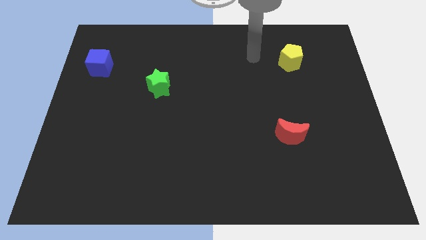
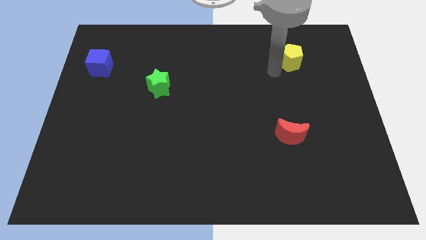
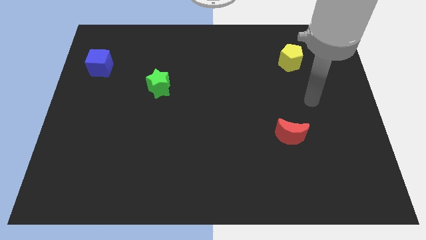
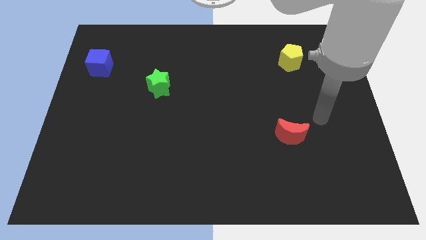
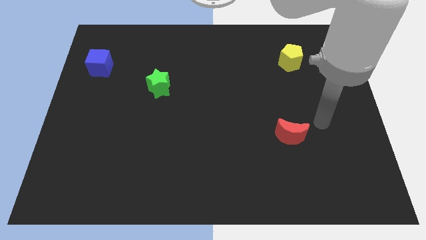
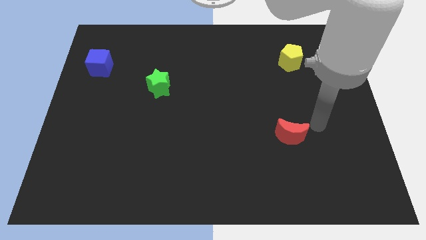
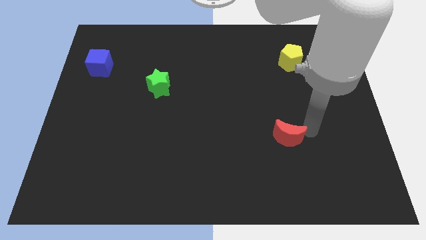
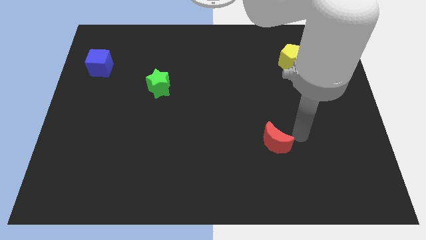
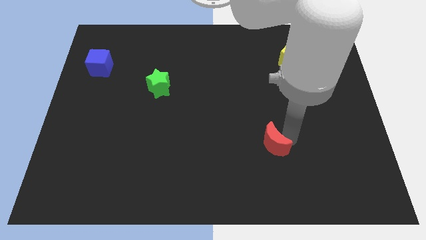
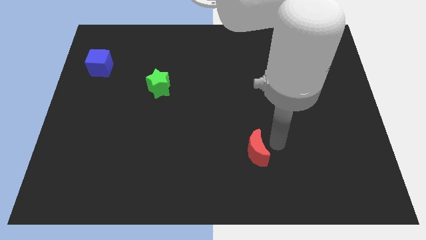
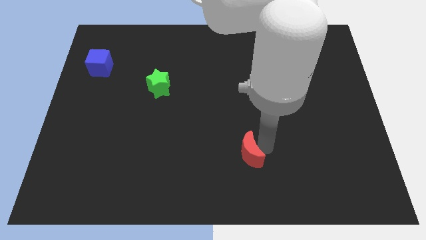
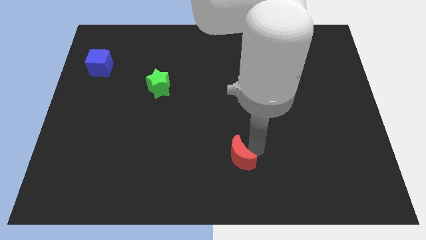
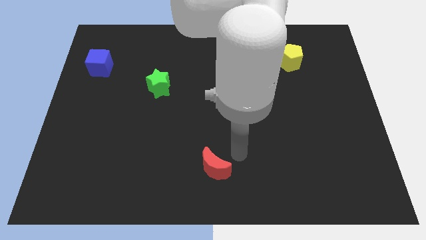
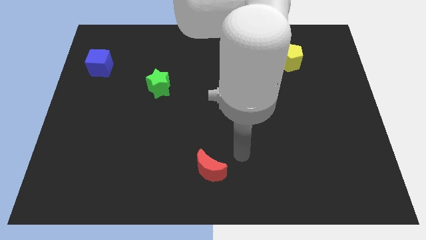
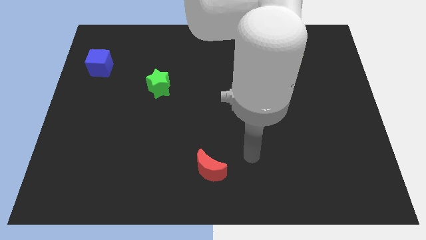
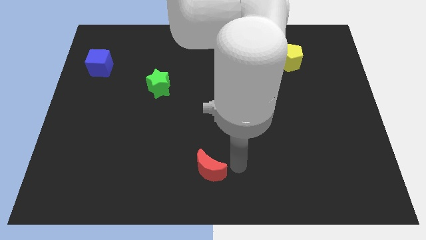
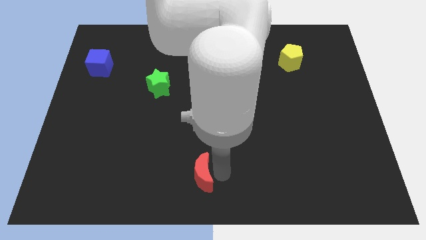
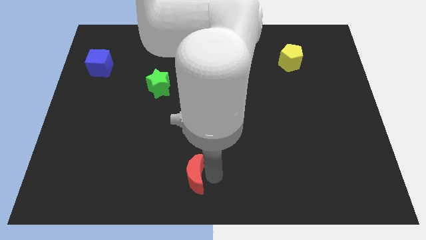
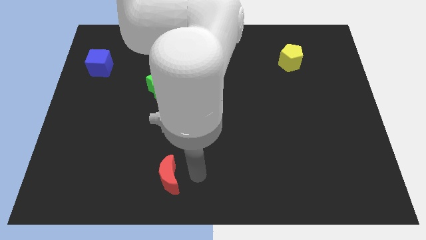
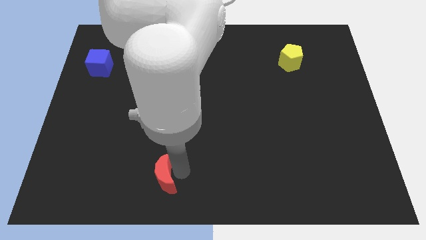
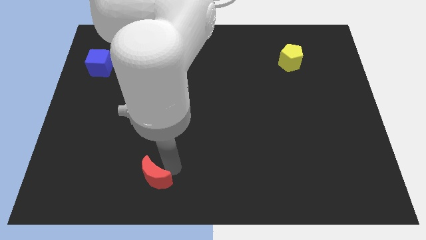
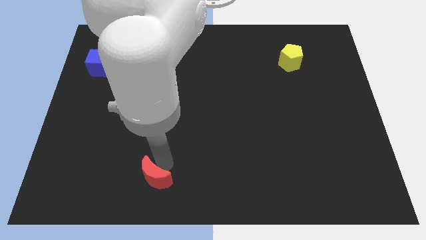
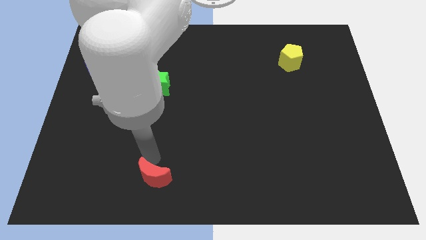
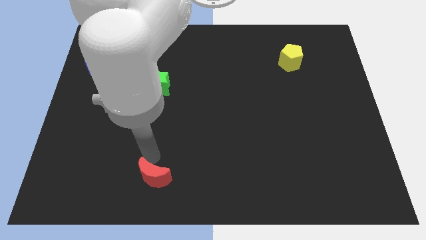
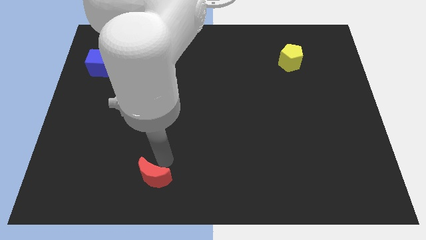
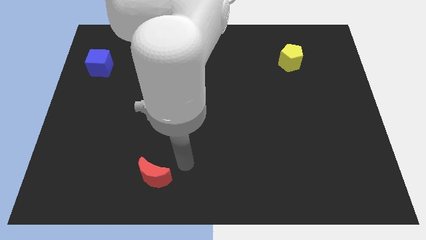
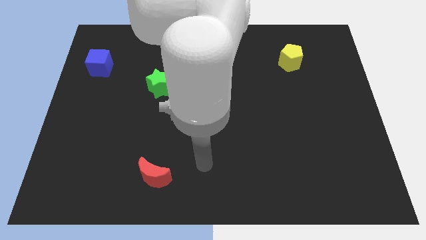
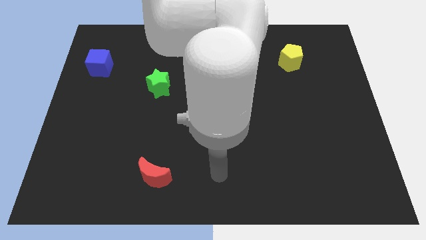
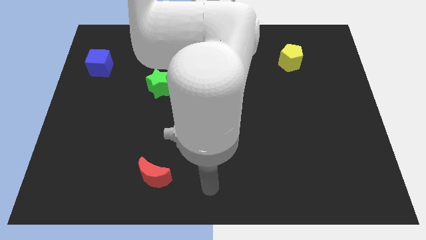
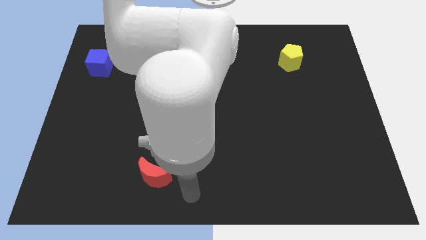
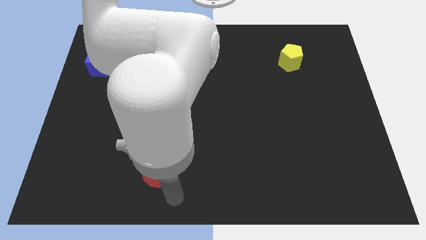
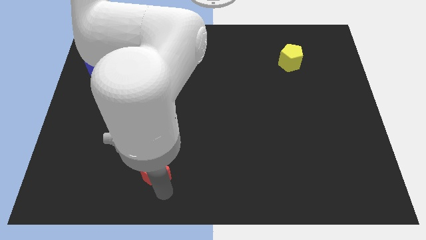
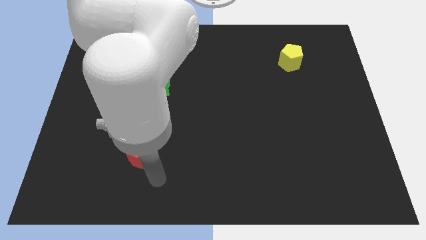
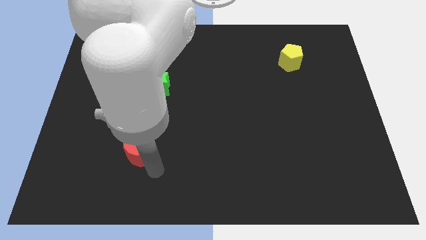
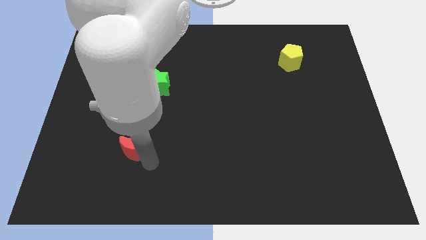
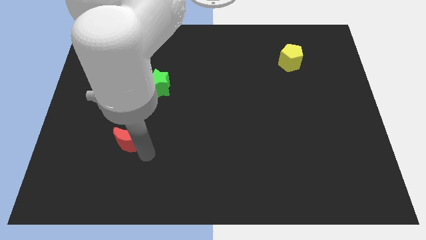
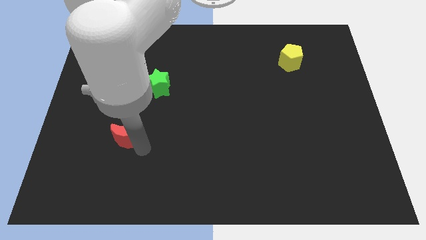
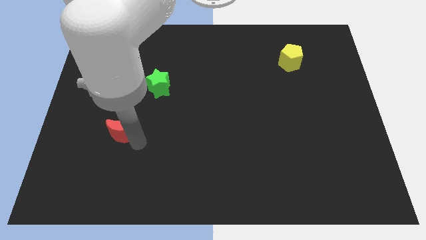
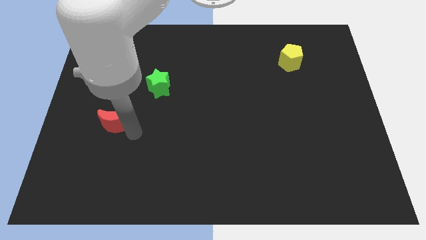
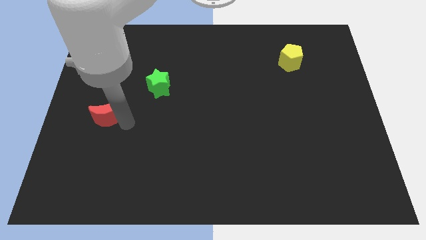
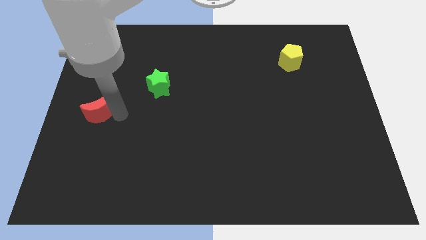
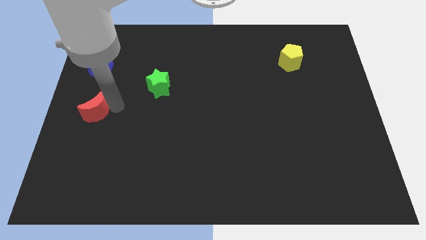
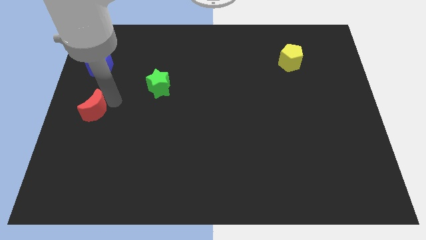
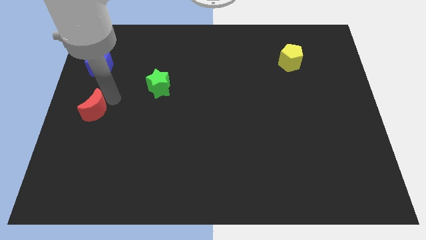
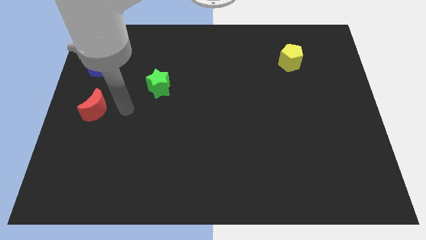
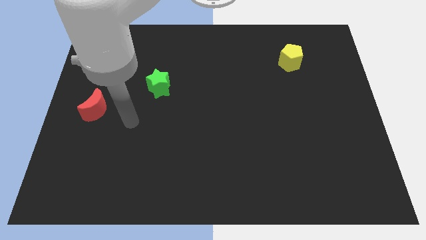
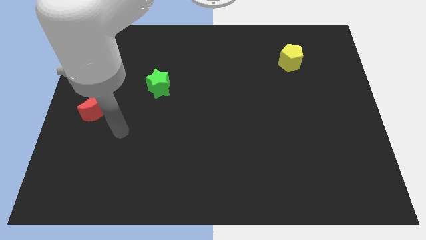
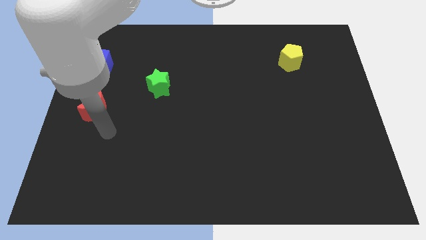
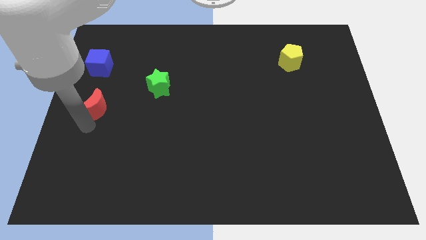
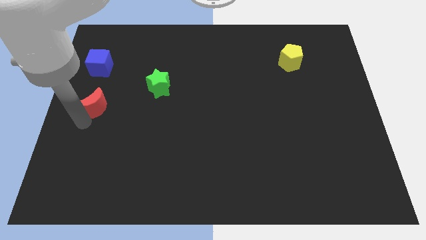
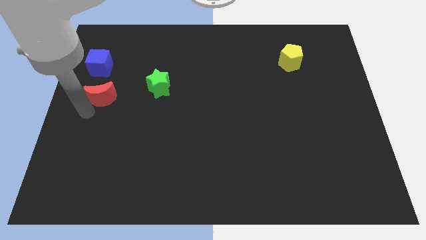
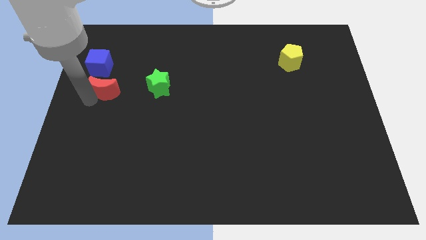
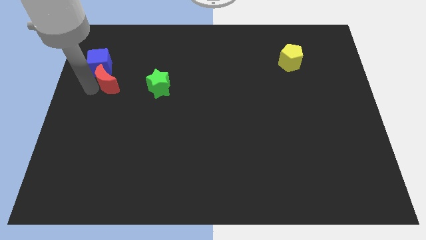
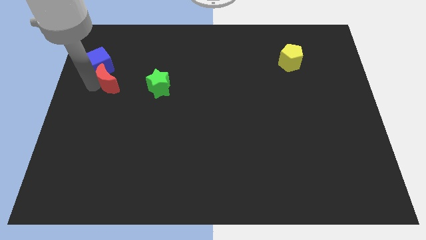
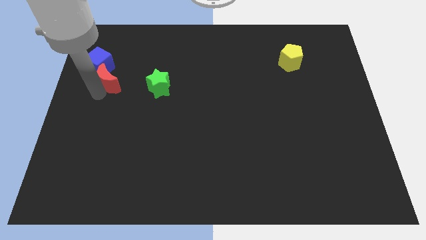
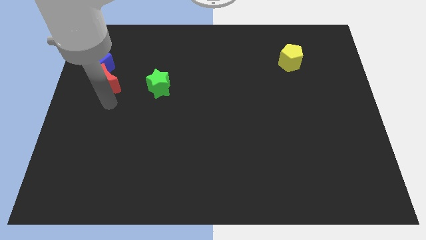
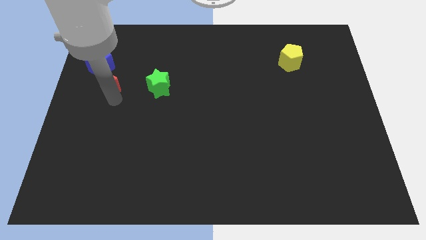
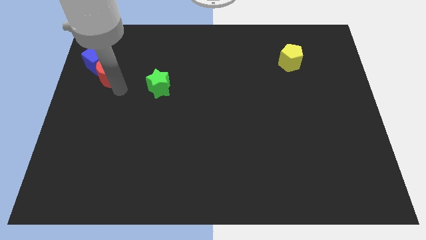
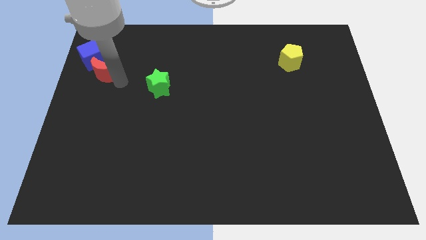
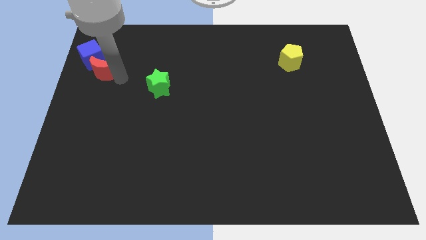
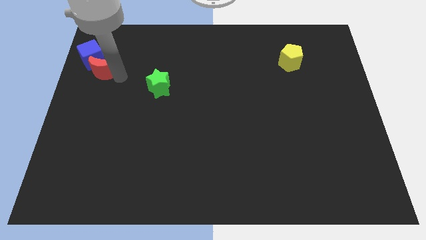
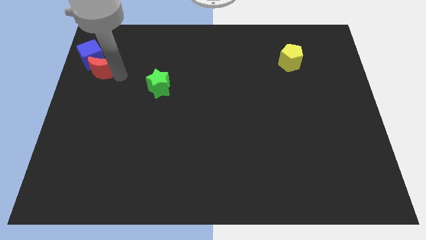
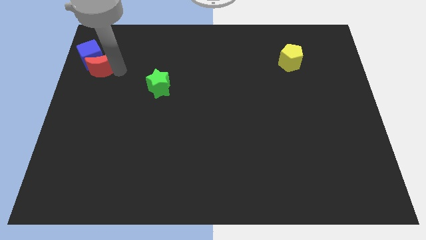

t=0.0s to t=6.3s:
slide the moon to the blue block

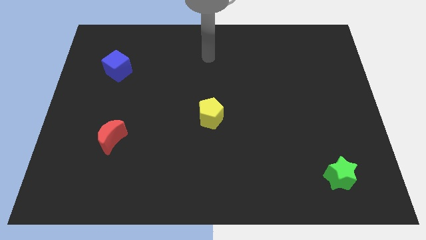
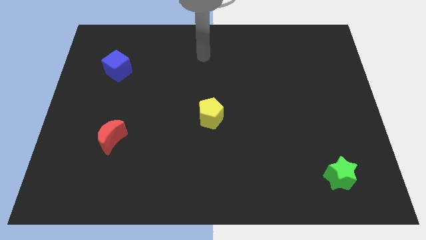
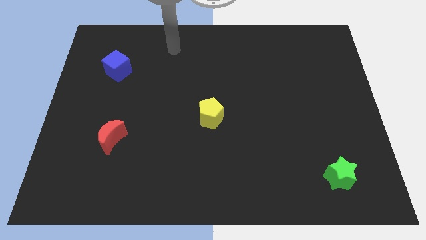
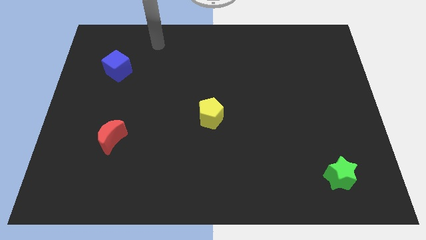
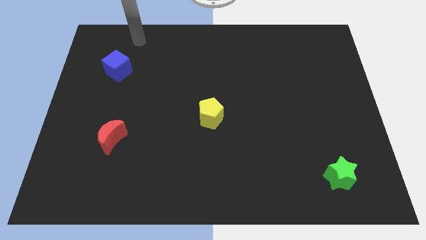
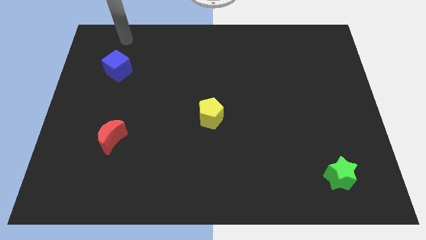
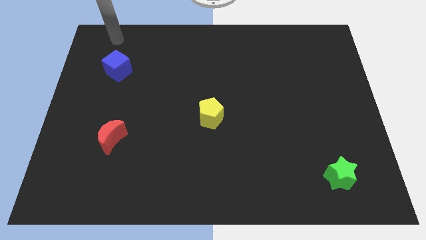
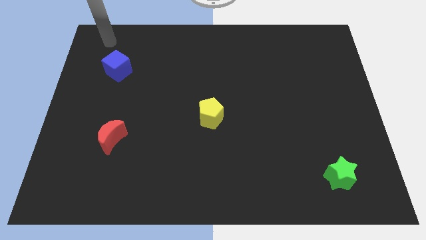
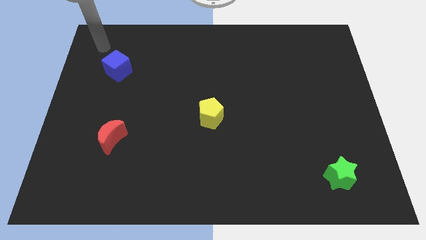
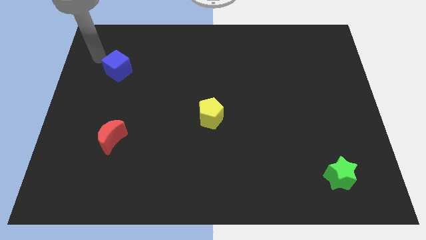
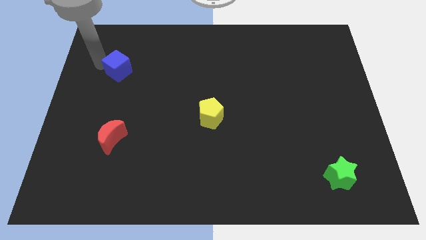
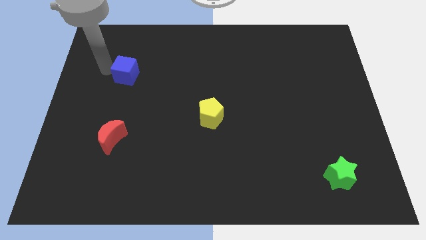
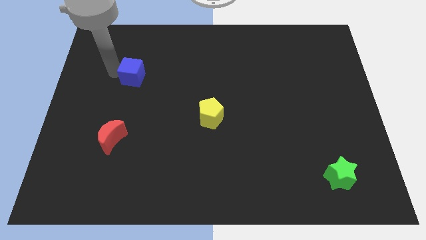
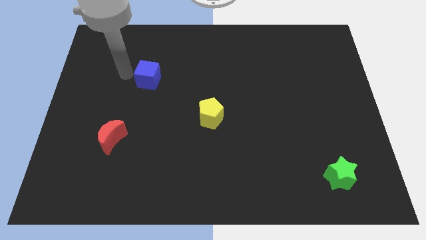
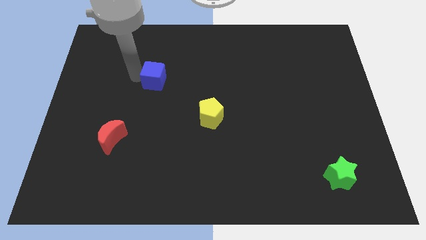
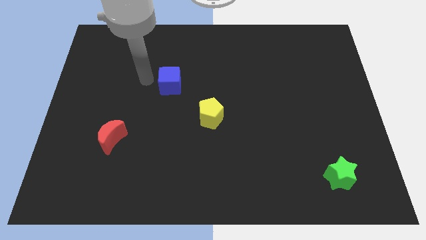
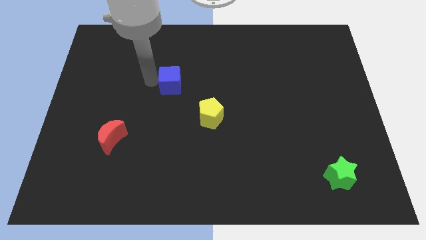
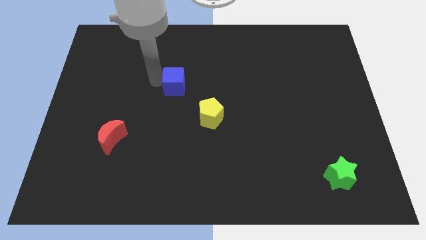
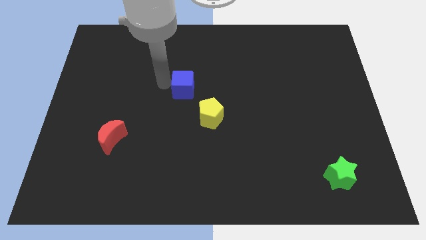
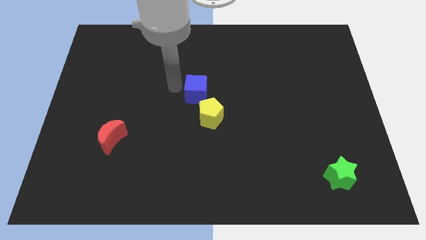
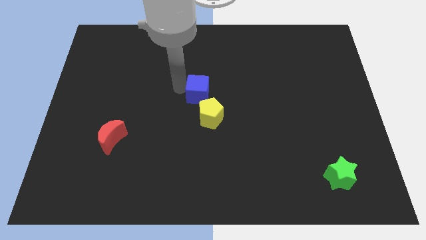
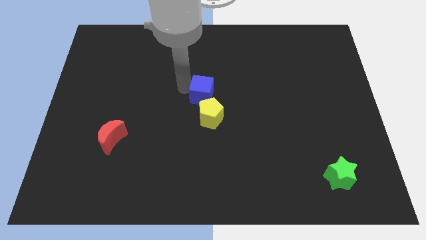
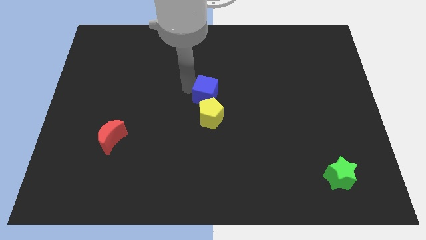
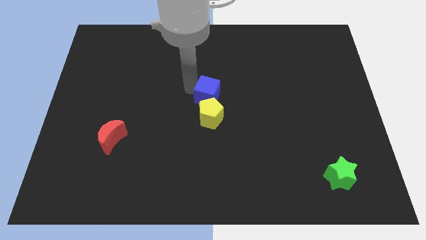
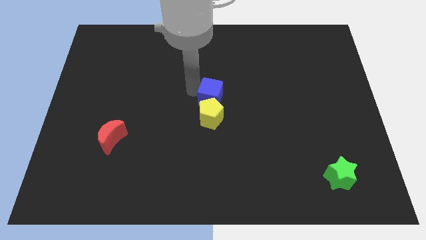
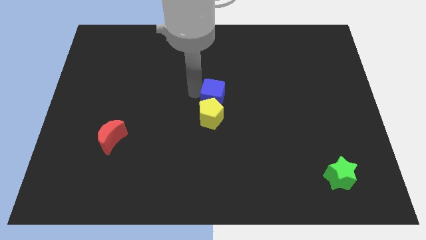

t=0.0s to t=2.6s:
put the cube close to the yellow pentagon
